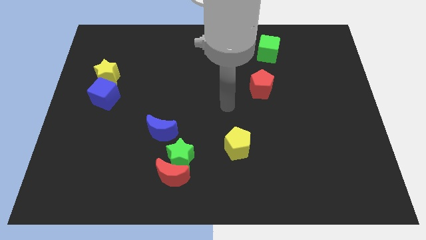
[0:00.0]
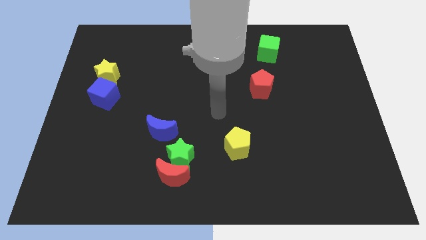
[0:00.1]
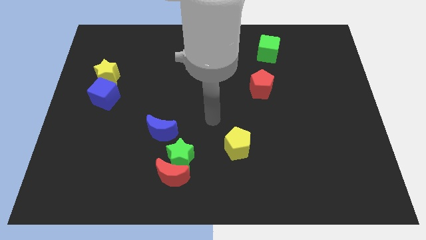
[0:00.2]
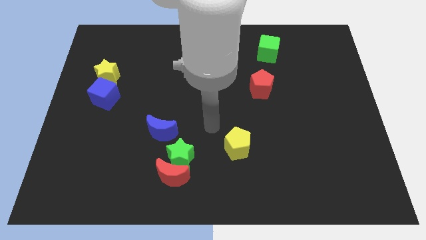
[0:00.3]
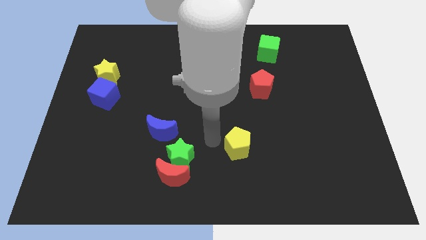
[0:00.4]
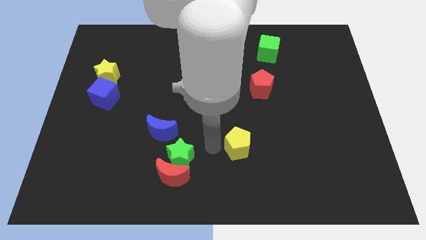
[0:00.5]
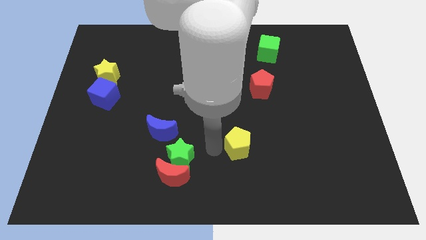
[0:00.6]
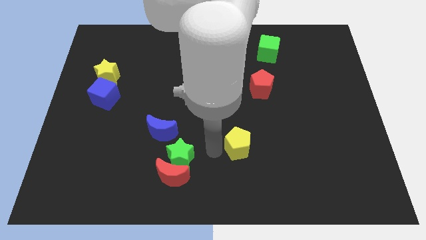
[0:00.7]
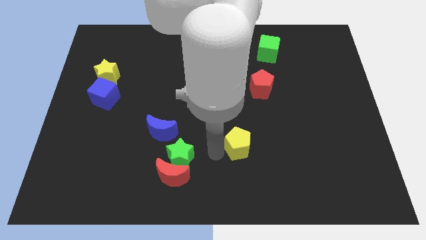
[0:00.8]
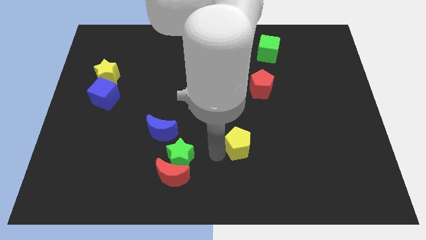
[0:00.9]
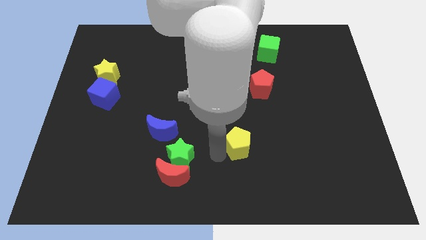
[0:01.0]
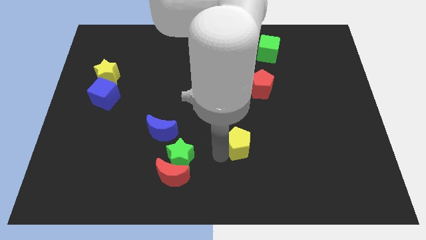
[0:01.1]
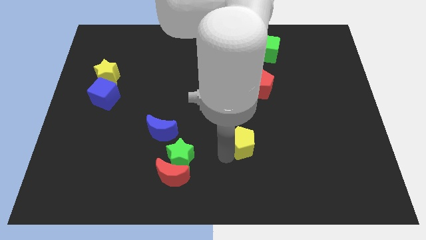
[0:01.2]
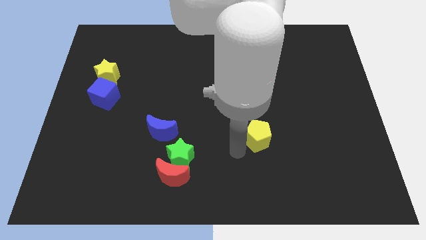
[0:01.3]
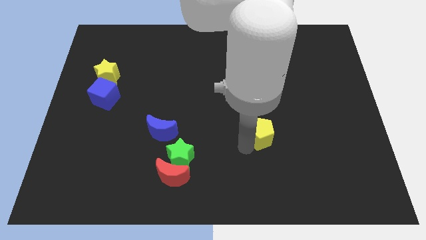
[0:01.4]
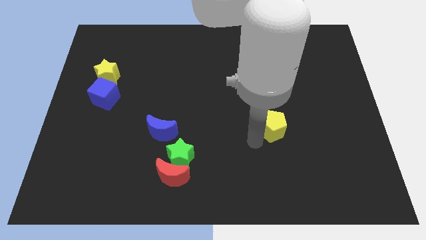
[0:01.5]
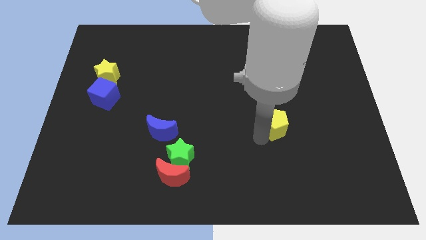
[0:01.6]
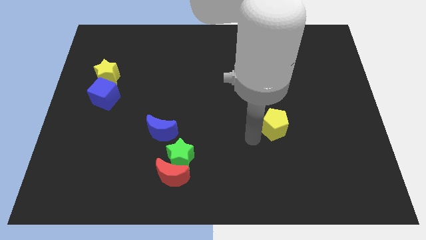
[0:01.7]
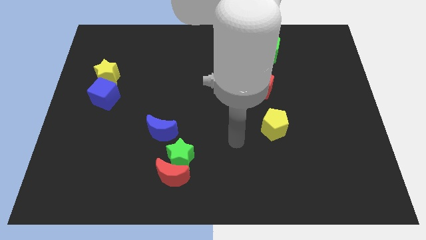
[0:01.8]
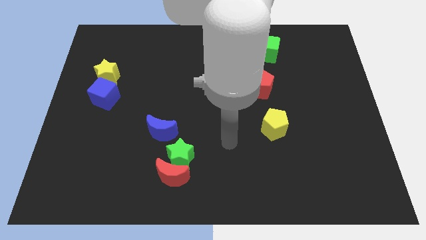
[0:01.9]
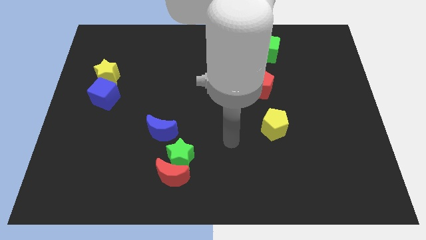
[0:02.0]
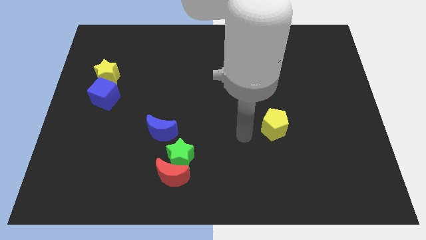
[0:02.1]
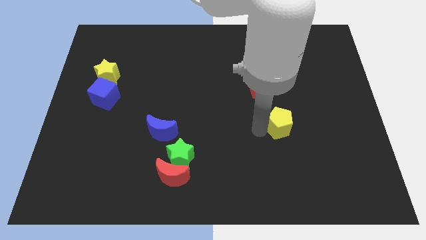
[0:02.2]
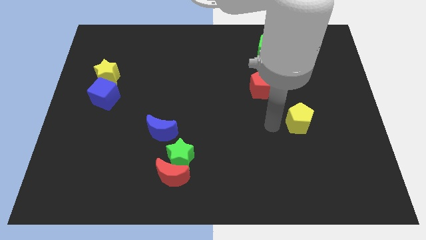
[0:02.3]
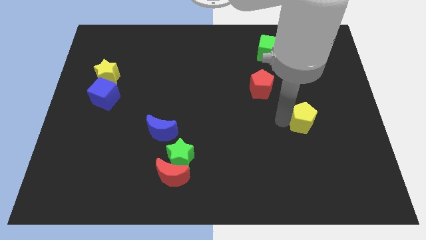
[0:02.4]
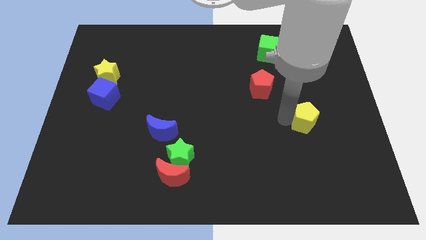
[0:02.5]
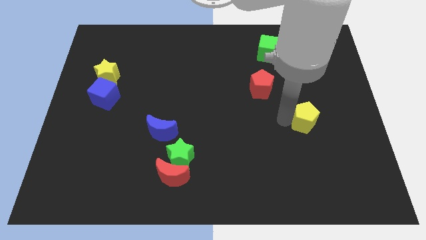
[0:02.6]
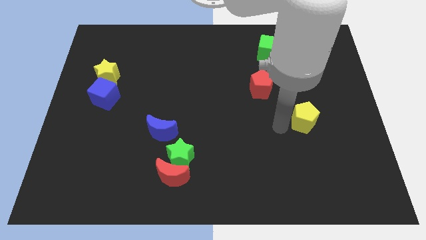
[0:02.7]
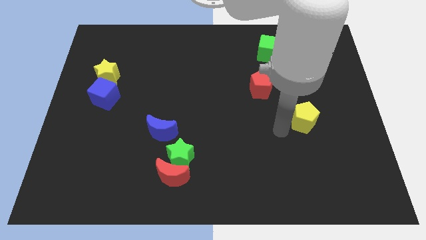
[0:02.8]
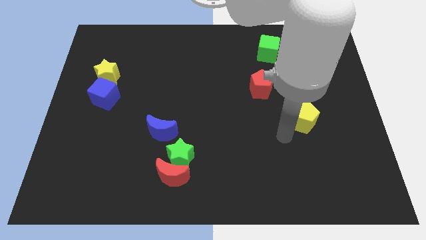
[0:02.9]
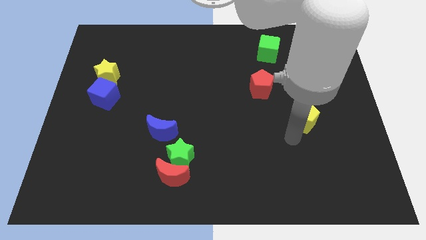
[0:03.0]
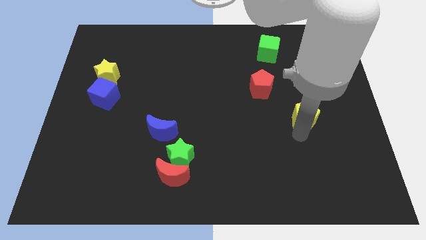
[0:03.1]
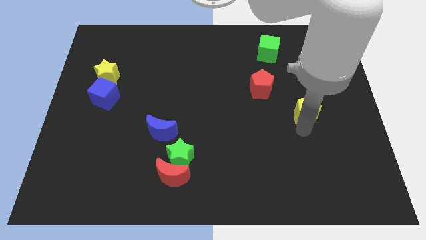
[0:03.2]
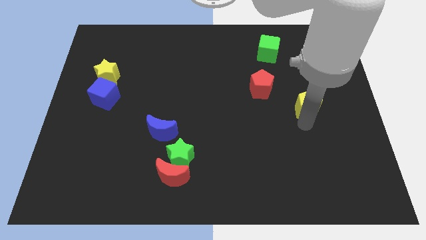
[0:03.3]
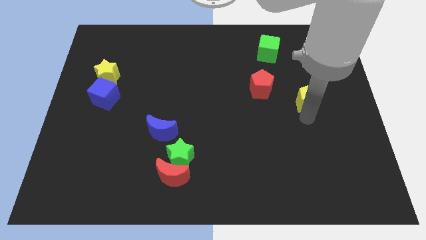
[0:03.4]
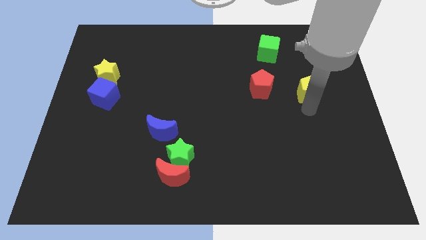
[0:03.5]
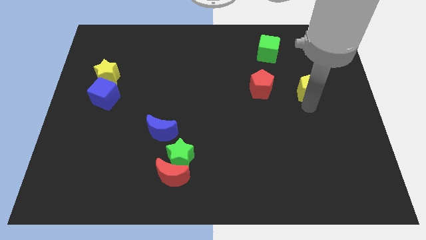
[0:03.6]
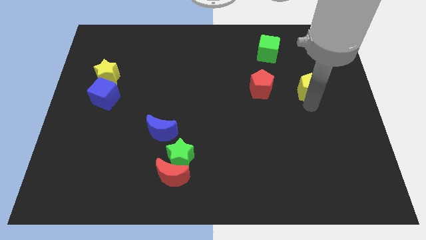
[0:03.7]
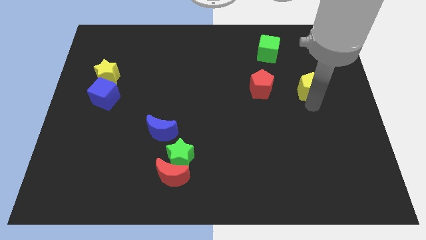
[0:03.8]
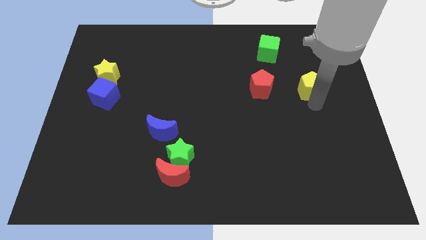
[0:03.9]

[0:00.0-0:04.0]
move the yellow pentagon to the right of the red pentagon

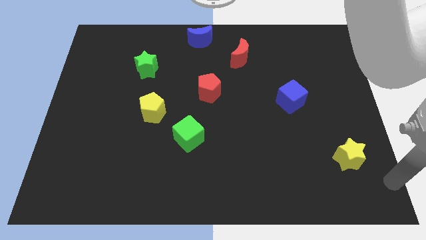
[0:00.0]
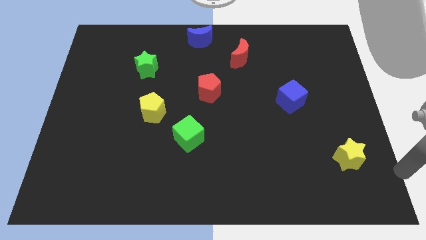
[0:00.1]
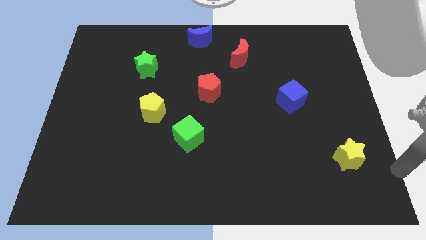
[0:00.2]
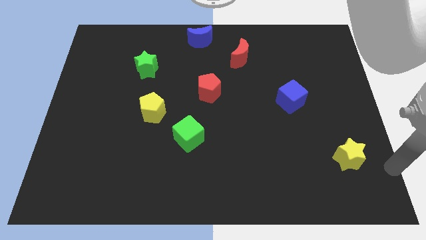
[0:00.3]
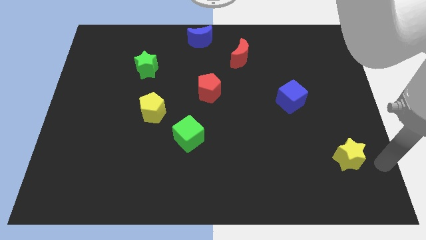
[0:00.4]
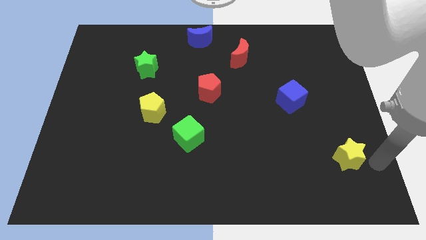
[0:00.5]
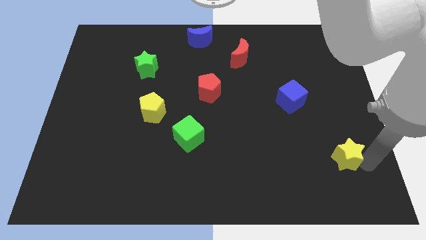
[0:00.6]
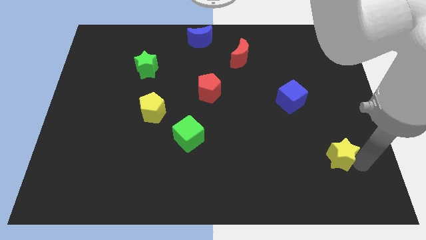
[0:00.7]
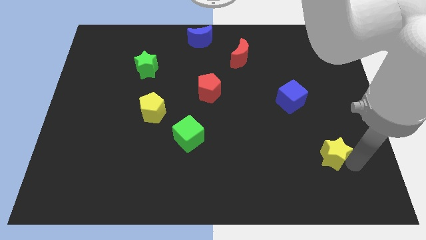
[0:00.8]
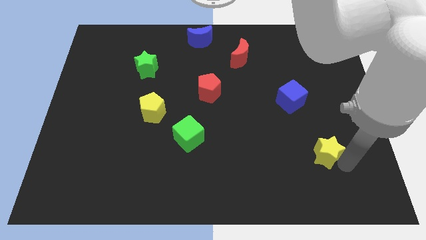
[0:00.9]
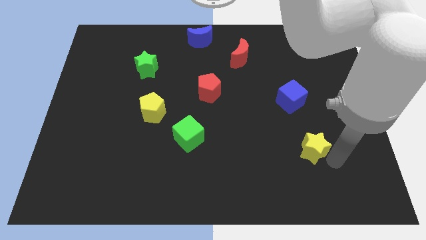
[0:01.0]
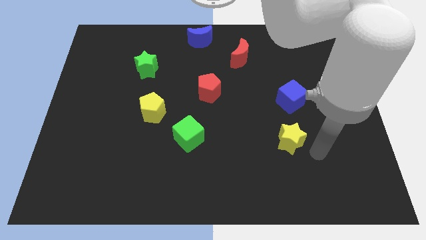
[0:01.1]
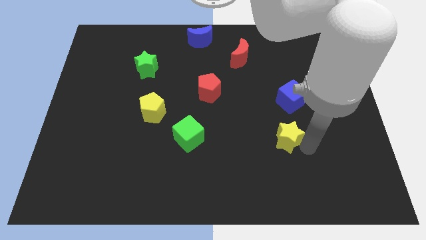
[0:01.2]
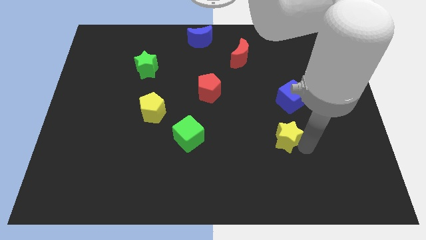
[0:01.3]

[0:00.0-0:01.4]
push the yellow star towards the center

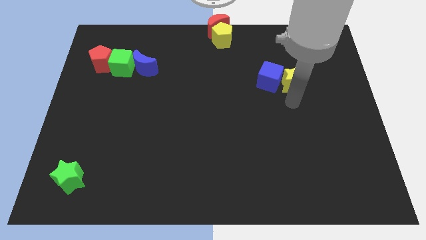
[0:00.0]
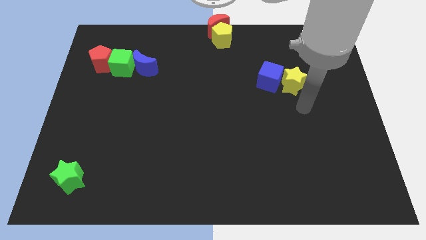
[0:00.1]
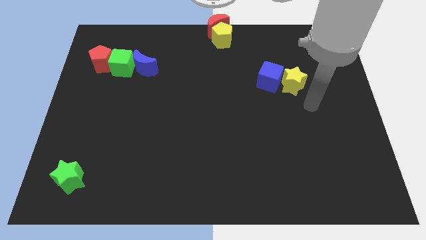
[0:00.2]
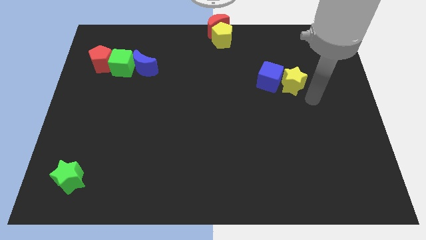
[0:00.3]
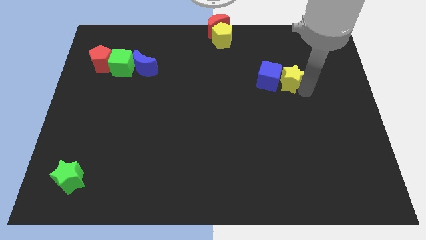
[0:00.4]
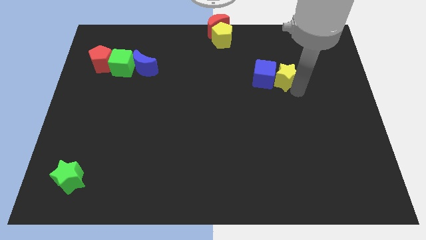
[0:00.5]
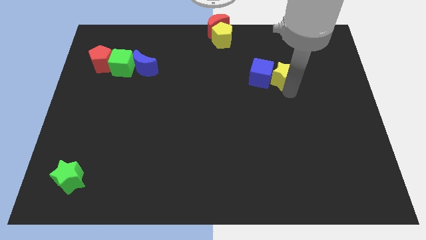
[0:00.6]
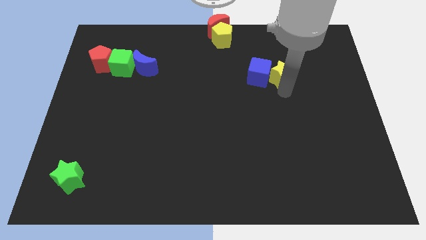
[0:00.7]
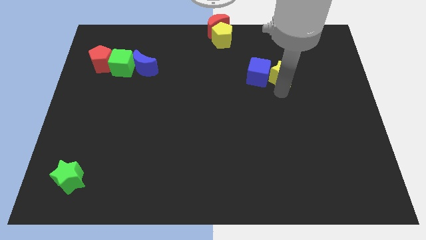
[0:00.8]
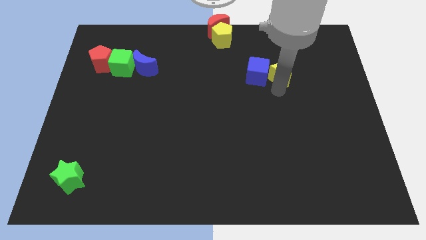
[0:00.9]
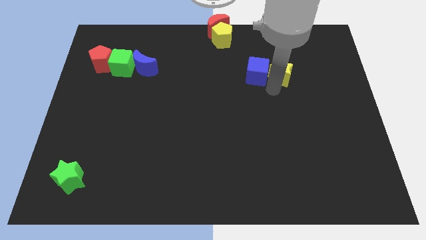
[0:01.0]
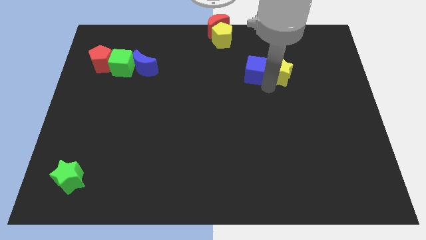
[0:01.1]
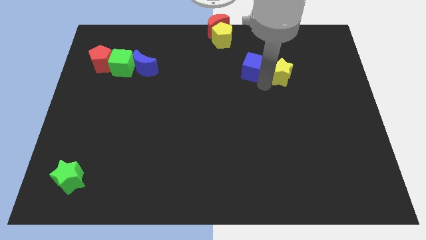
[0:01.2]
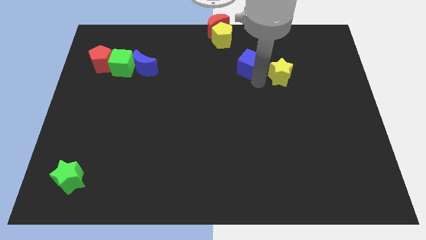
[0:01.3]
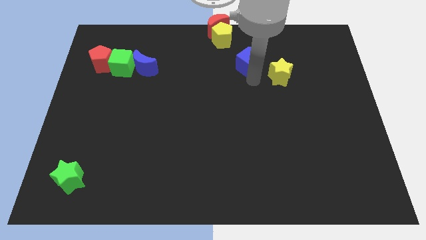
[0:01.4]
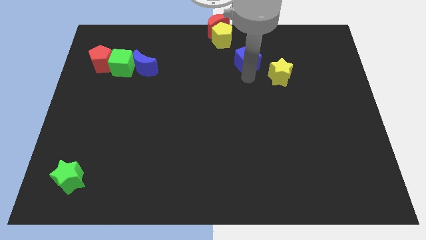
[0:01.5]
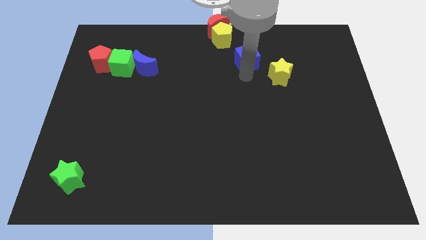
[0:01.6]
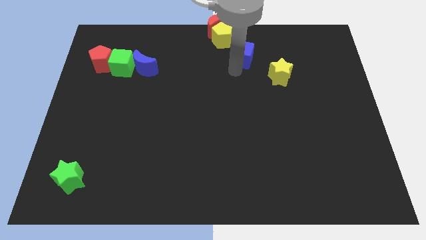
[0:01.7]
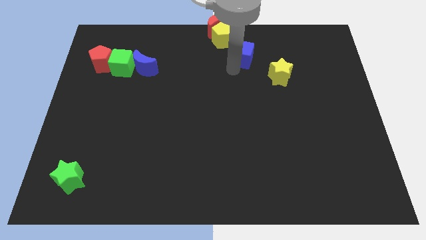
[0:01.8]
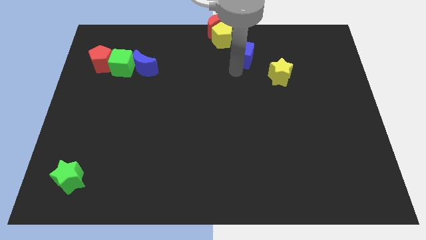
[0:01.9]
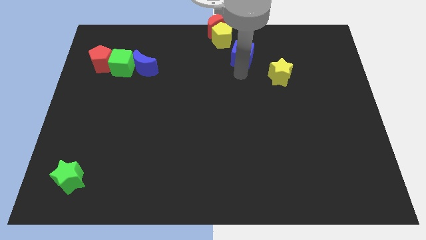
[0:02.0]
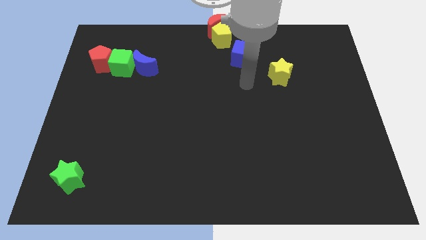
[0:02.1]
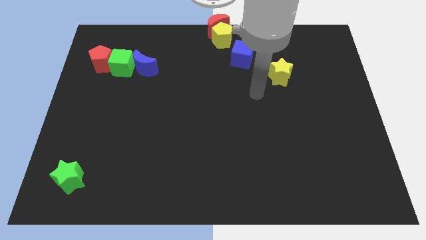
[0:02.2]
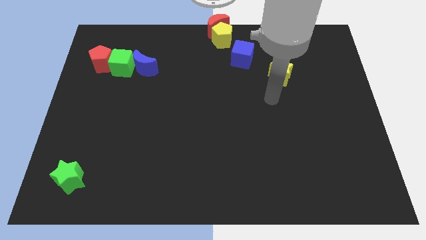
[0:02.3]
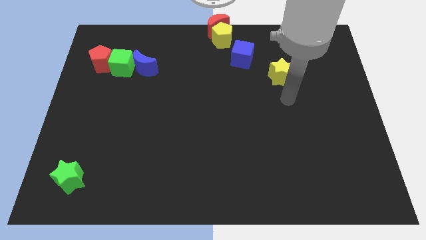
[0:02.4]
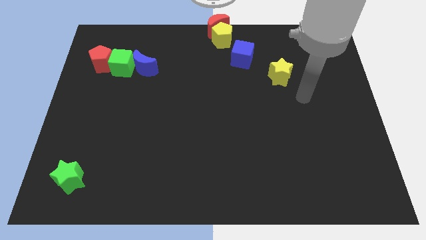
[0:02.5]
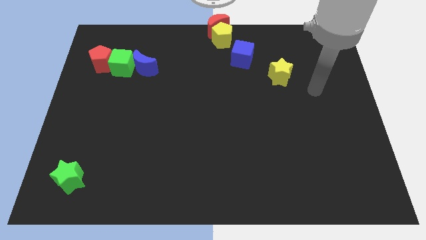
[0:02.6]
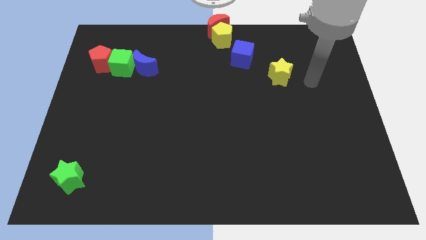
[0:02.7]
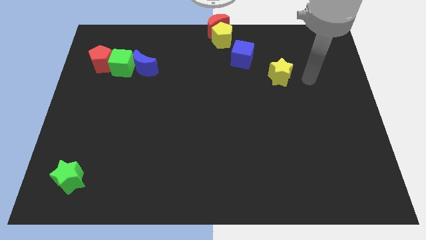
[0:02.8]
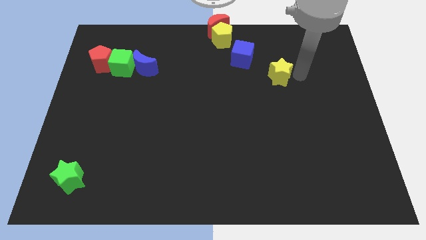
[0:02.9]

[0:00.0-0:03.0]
separate the blue cube from the yellow star

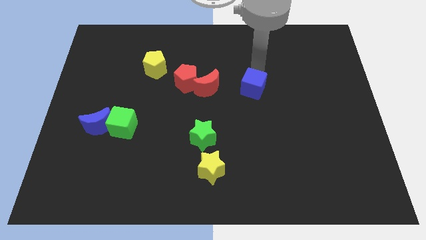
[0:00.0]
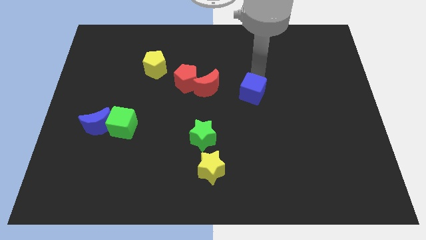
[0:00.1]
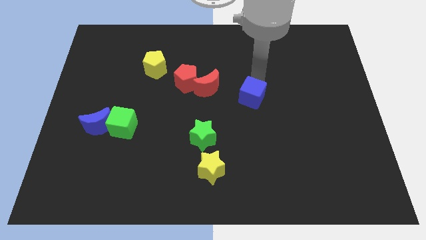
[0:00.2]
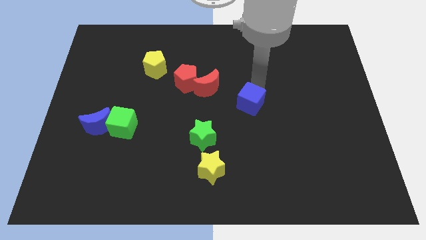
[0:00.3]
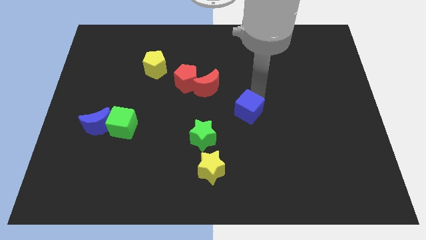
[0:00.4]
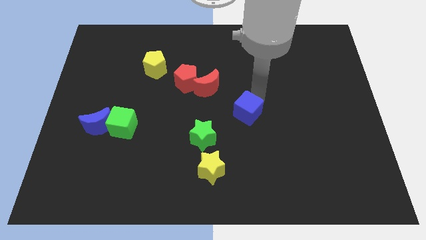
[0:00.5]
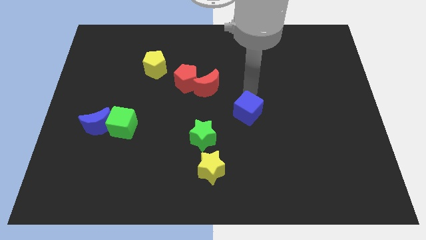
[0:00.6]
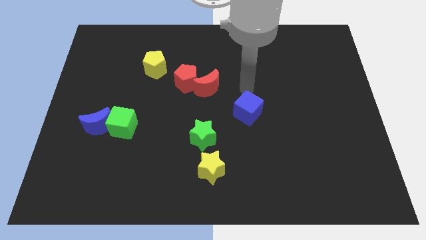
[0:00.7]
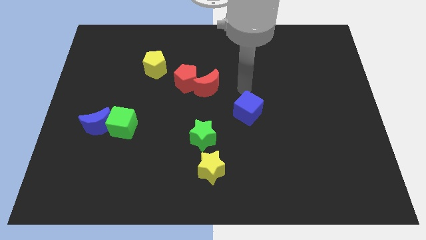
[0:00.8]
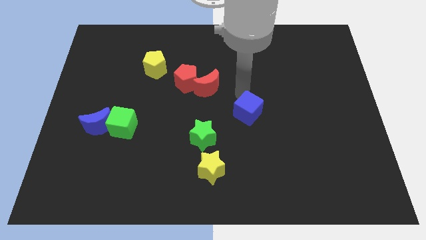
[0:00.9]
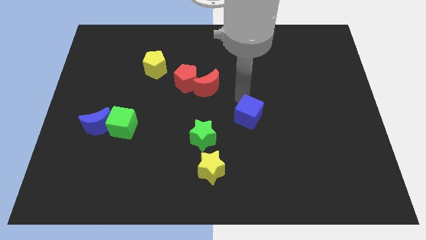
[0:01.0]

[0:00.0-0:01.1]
move blue cube slightly downwards
